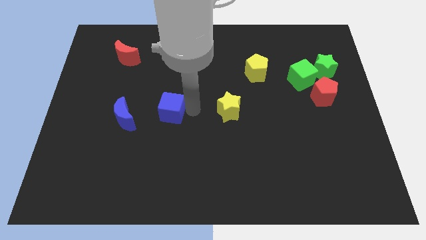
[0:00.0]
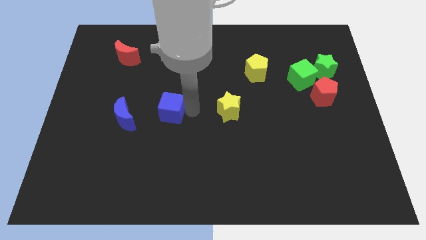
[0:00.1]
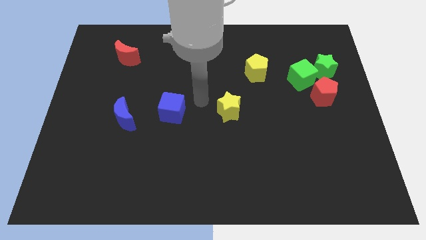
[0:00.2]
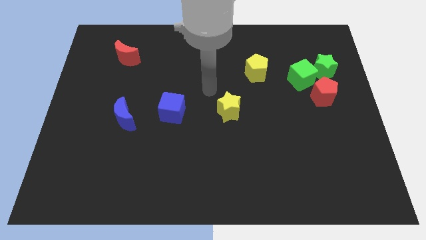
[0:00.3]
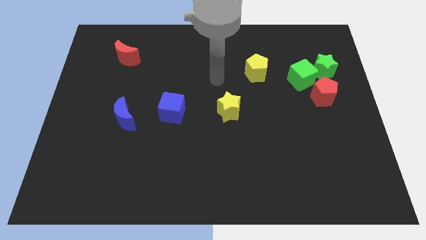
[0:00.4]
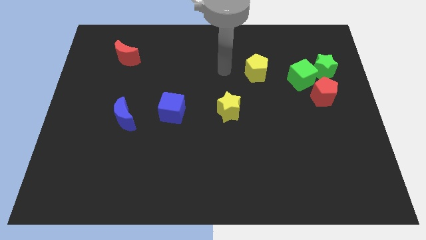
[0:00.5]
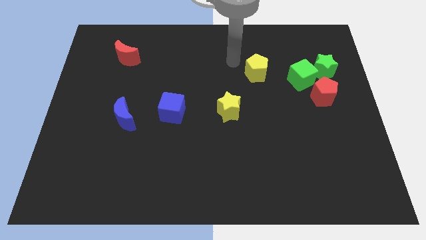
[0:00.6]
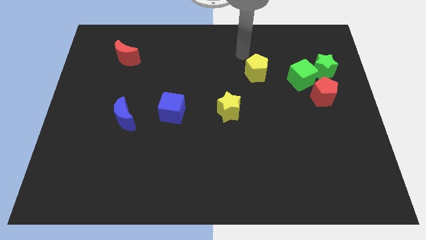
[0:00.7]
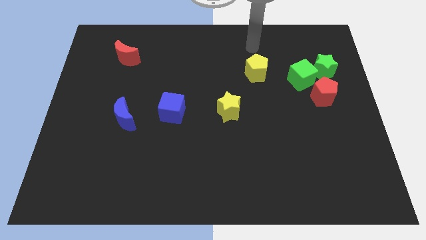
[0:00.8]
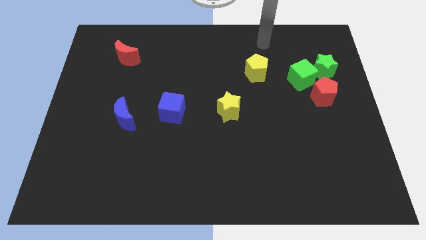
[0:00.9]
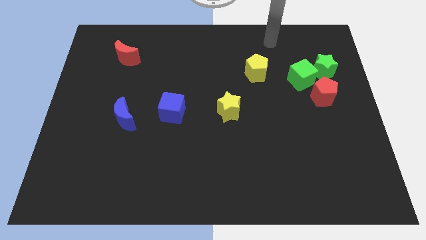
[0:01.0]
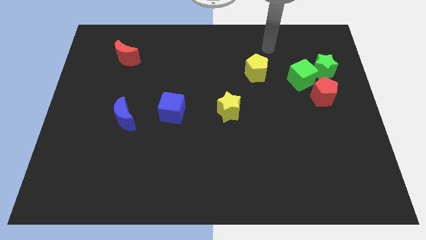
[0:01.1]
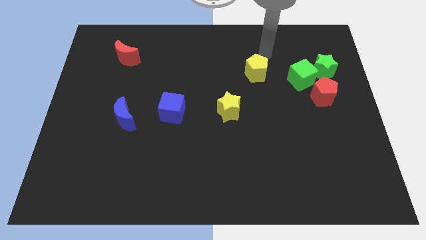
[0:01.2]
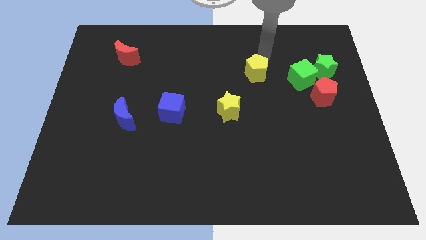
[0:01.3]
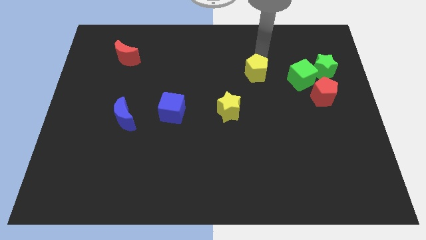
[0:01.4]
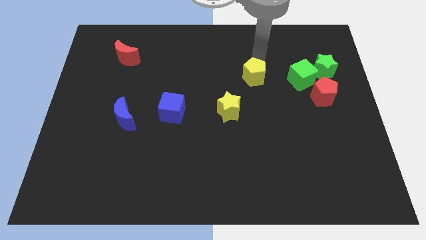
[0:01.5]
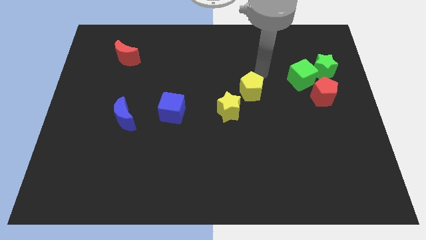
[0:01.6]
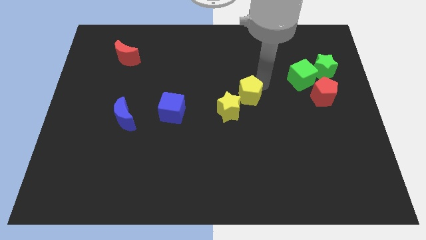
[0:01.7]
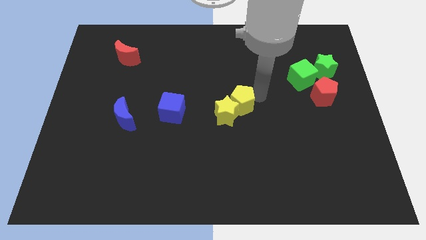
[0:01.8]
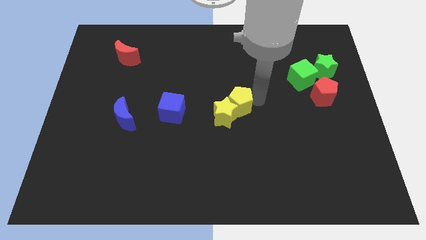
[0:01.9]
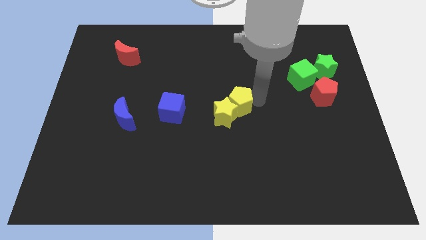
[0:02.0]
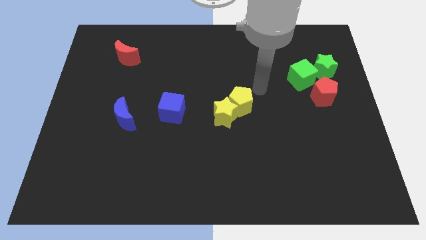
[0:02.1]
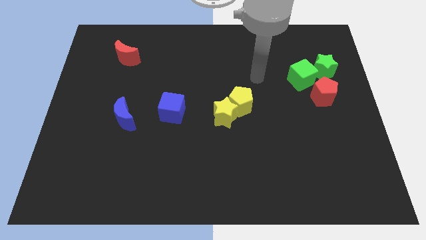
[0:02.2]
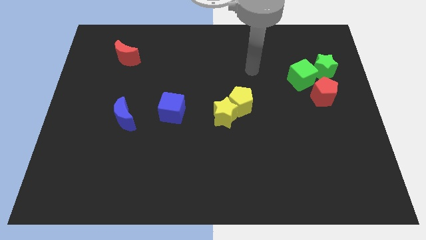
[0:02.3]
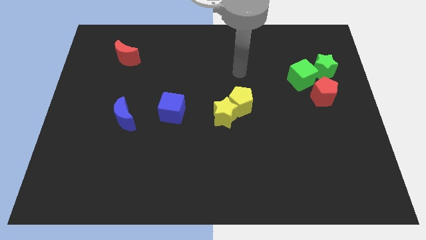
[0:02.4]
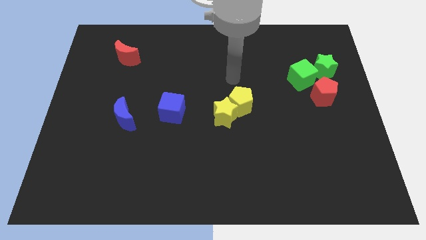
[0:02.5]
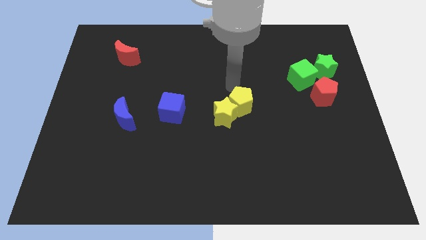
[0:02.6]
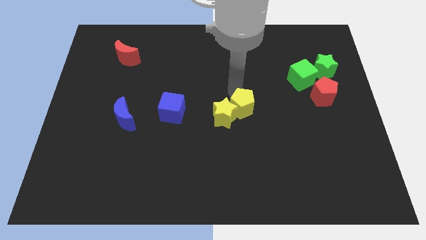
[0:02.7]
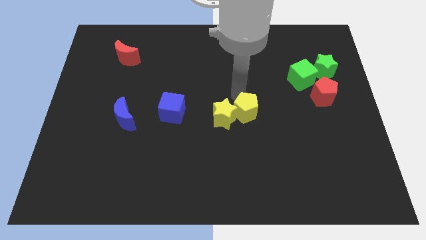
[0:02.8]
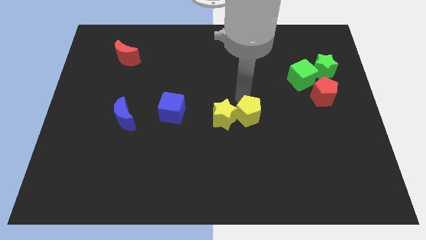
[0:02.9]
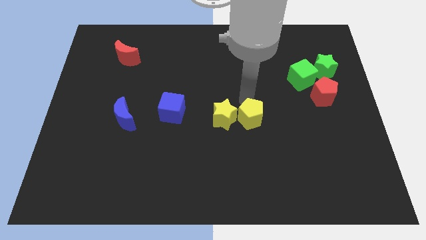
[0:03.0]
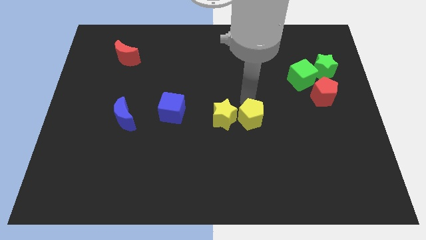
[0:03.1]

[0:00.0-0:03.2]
move the yellow pentagon into the top right of the yellow star

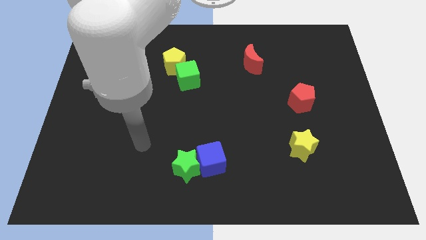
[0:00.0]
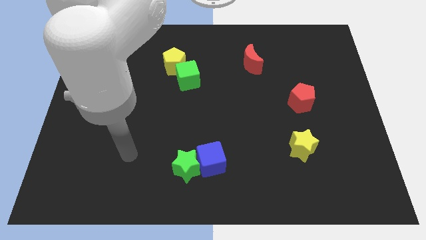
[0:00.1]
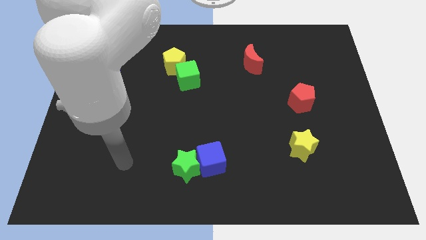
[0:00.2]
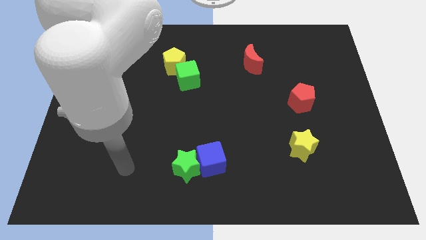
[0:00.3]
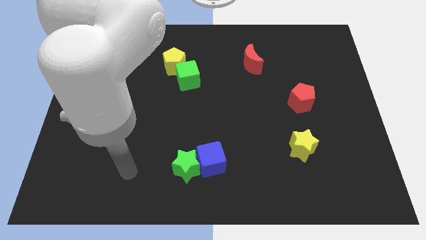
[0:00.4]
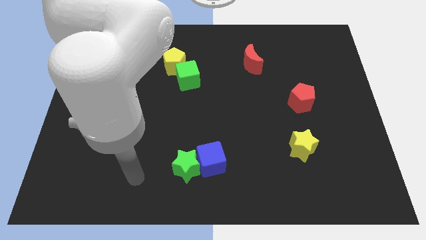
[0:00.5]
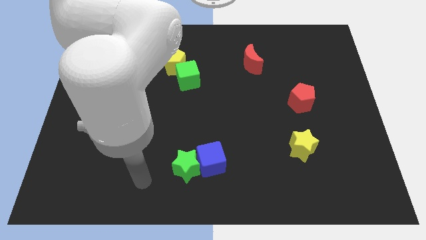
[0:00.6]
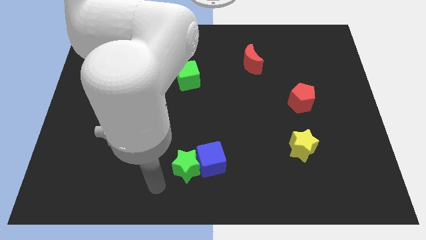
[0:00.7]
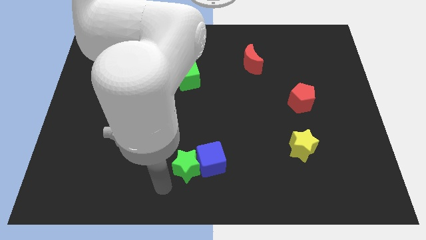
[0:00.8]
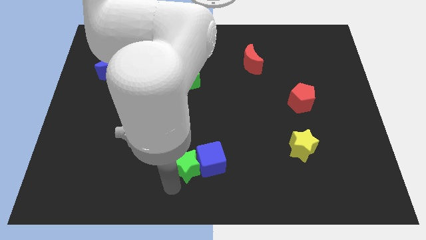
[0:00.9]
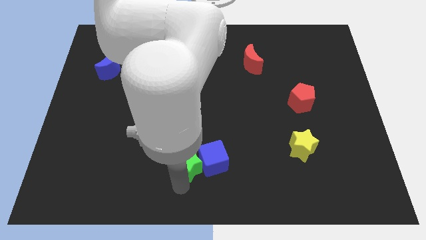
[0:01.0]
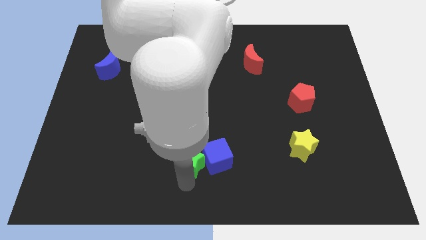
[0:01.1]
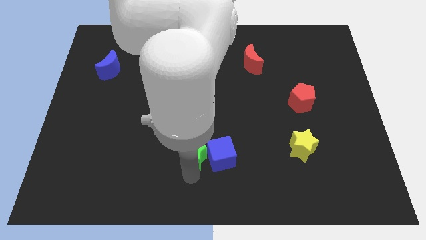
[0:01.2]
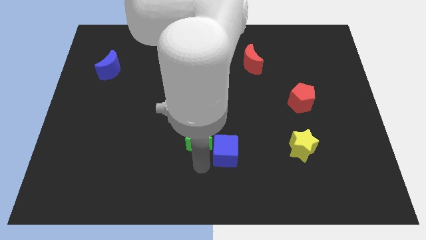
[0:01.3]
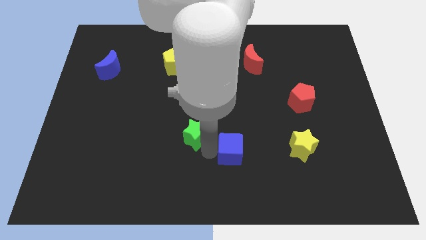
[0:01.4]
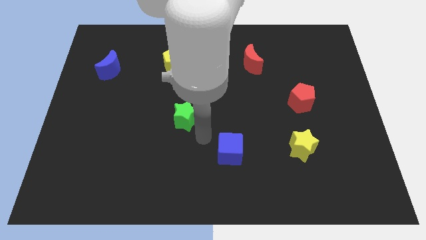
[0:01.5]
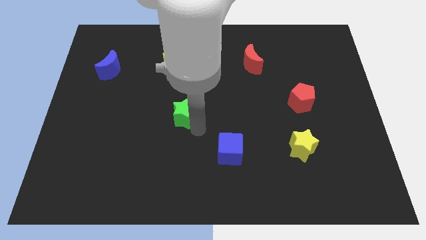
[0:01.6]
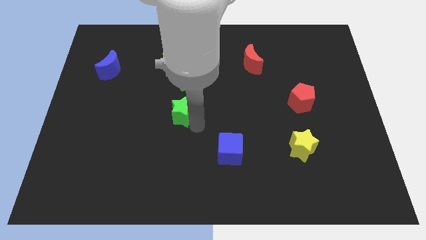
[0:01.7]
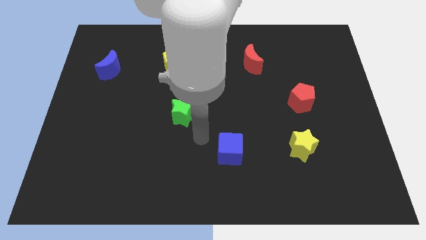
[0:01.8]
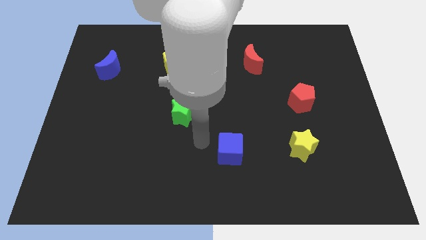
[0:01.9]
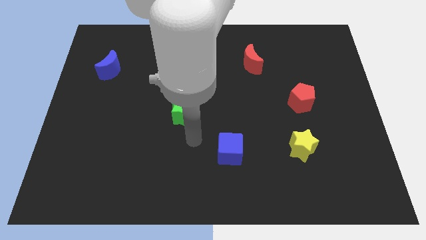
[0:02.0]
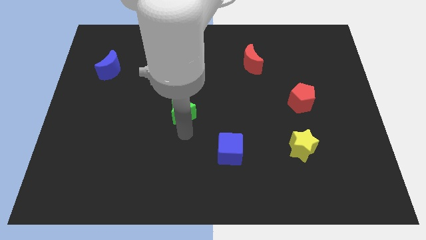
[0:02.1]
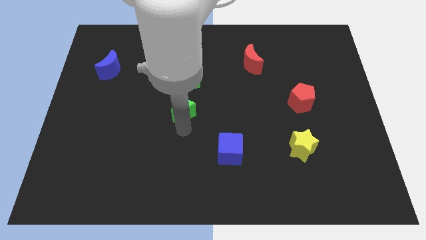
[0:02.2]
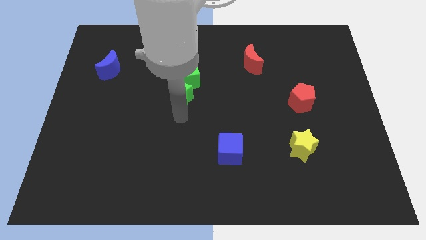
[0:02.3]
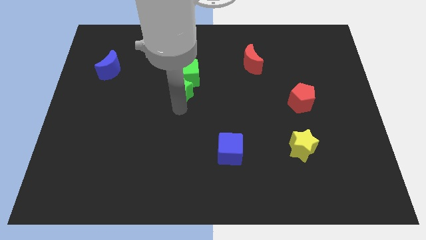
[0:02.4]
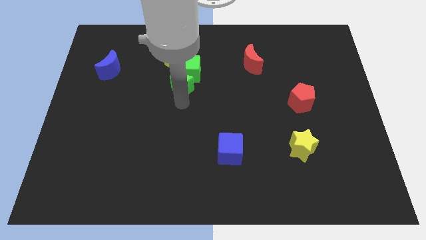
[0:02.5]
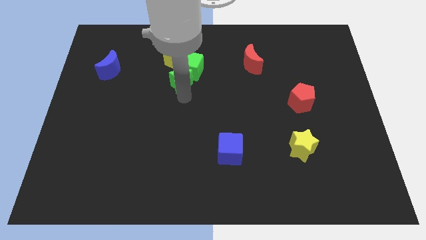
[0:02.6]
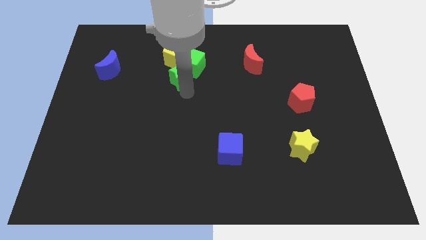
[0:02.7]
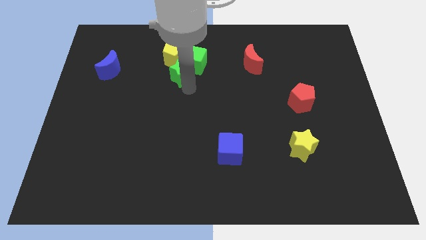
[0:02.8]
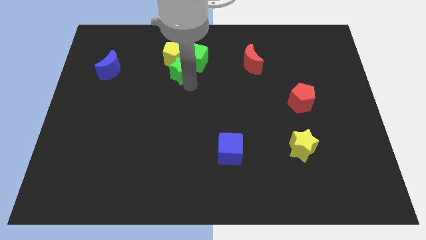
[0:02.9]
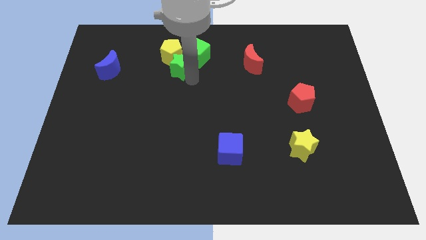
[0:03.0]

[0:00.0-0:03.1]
place the green star and green cube to the top center of the board

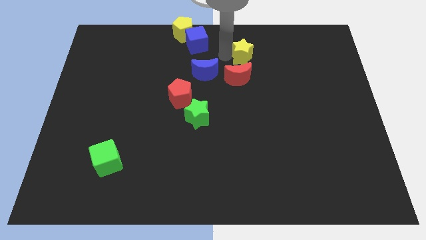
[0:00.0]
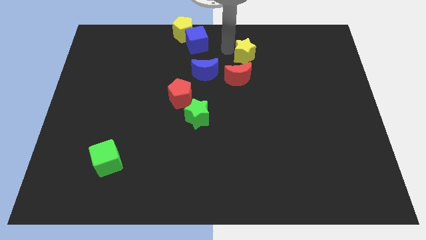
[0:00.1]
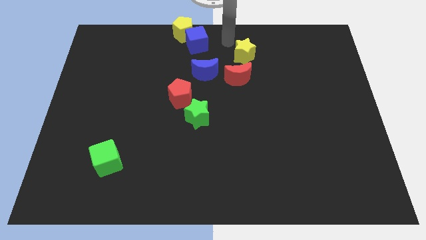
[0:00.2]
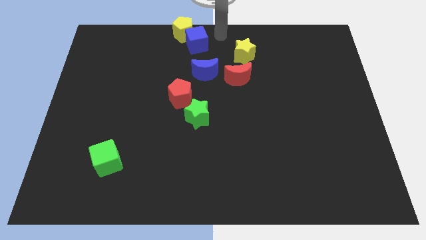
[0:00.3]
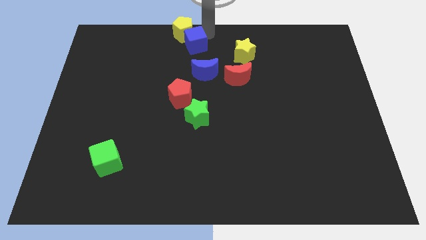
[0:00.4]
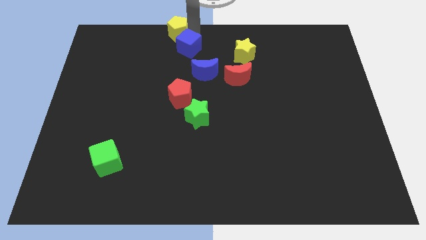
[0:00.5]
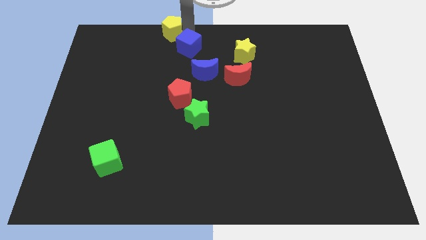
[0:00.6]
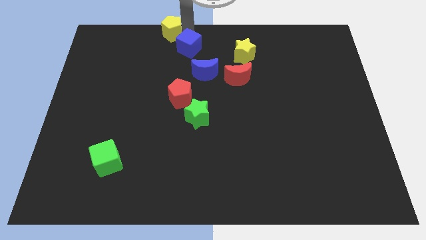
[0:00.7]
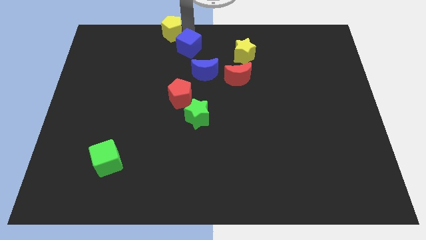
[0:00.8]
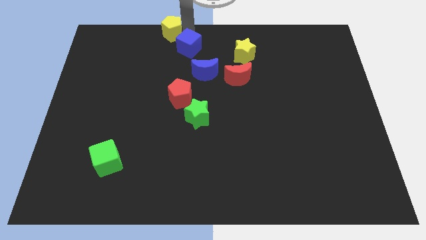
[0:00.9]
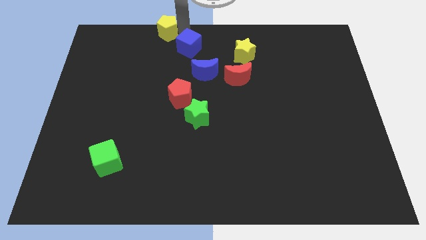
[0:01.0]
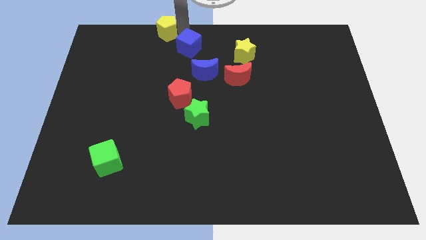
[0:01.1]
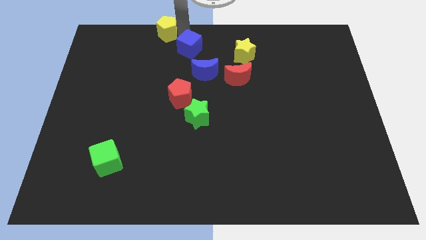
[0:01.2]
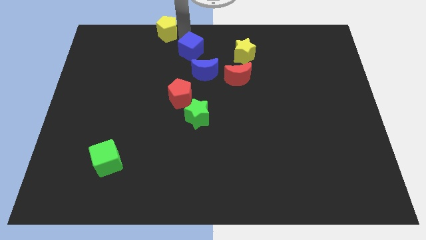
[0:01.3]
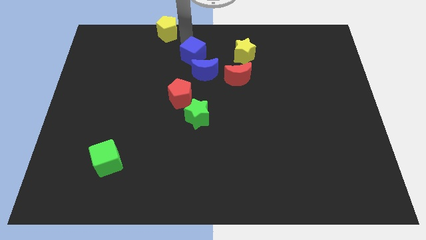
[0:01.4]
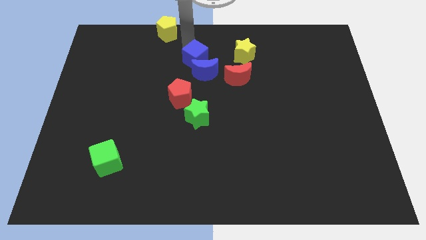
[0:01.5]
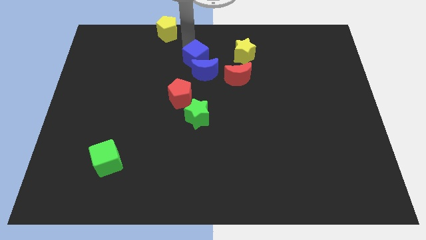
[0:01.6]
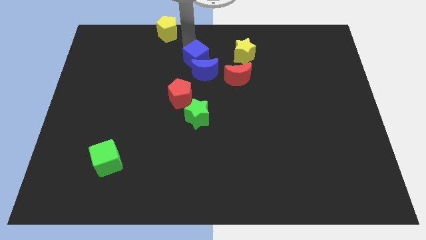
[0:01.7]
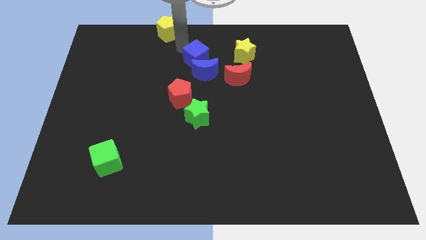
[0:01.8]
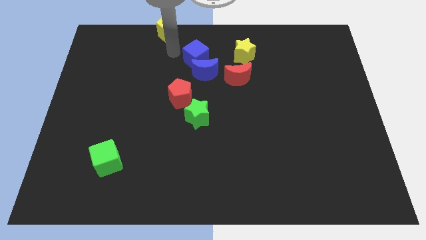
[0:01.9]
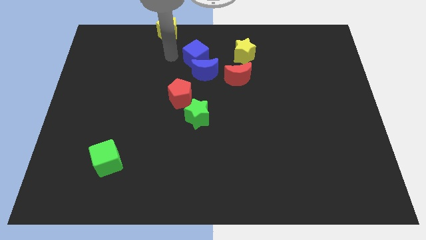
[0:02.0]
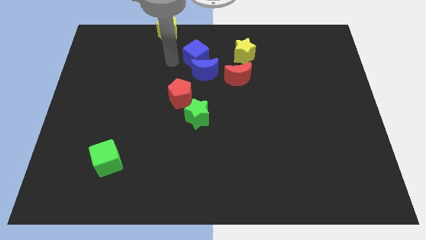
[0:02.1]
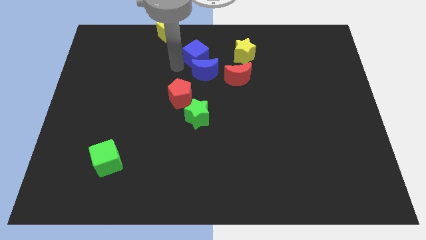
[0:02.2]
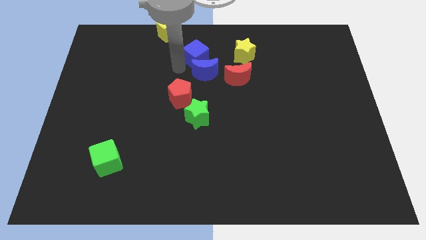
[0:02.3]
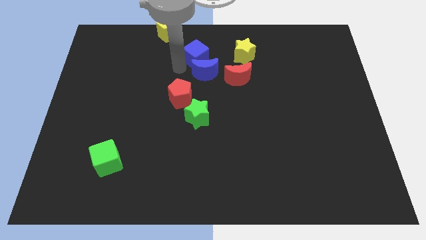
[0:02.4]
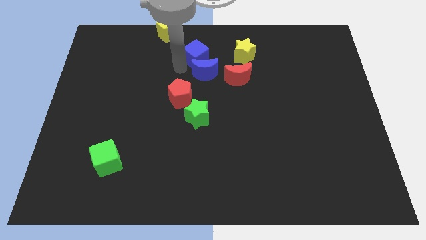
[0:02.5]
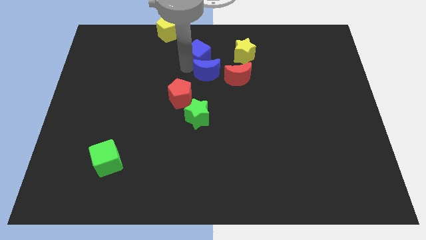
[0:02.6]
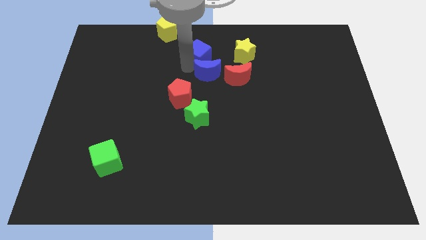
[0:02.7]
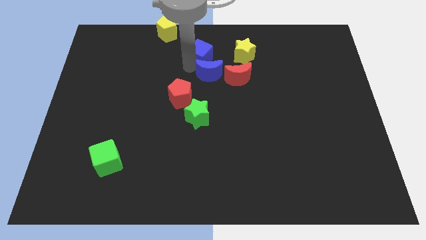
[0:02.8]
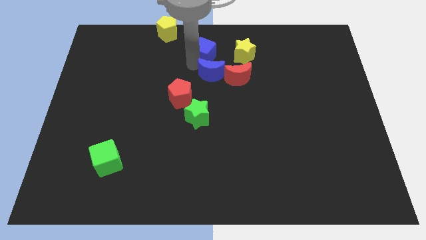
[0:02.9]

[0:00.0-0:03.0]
push blue cube into blue moon
